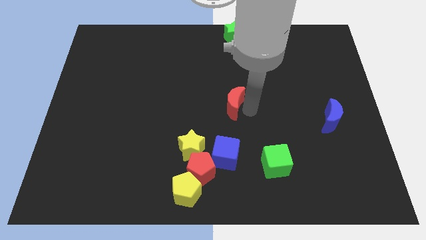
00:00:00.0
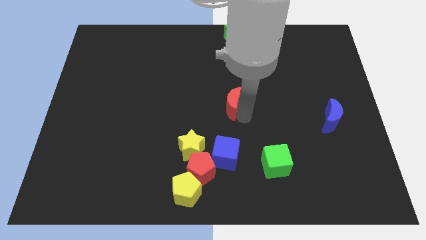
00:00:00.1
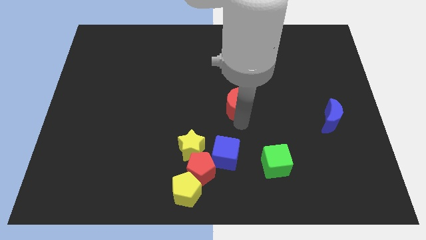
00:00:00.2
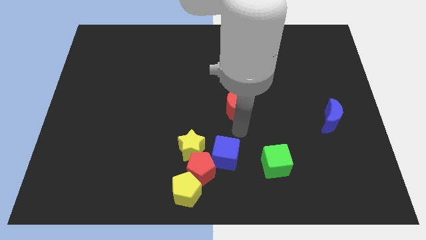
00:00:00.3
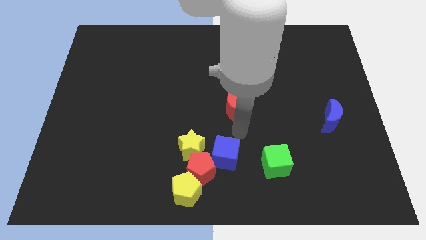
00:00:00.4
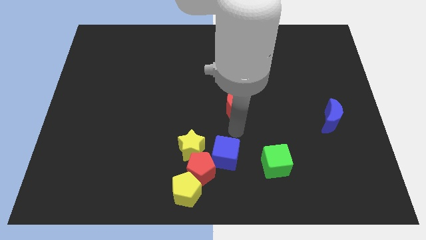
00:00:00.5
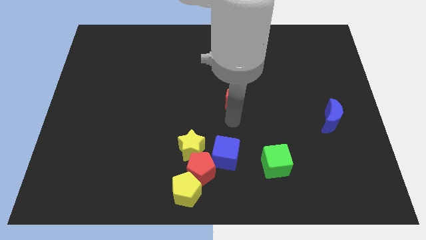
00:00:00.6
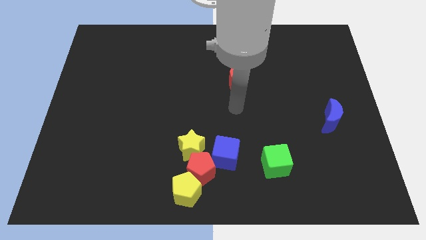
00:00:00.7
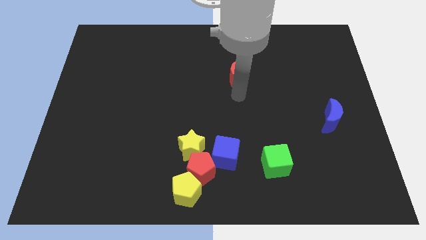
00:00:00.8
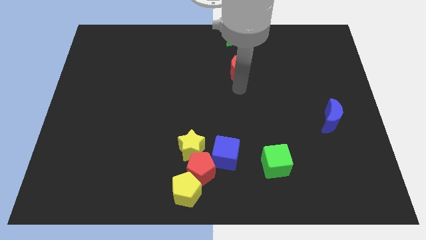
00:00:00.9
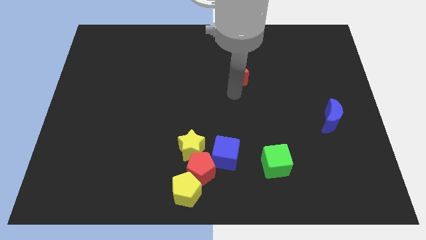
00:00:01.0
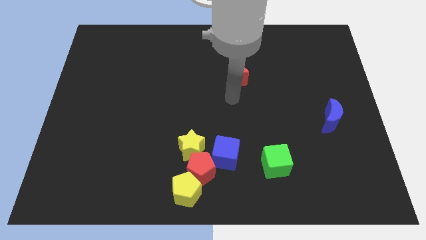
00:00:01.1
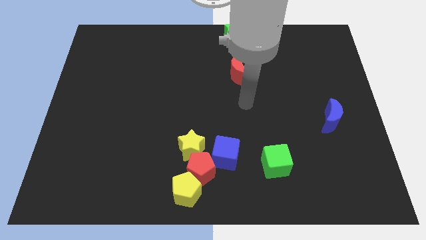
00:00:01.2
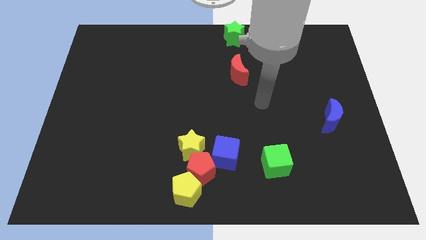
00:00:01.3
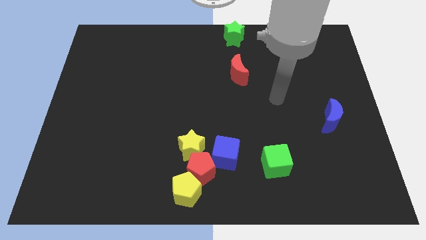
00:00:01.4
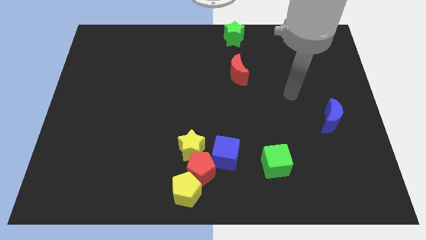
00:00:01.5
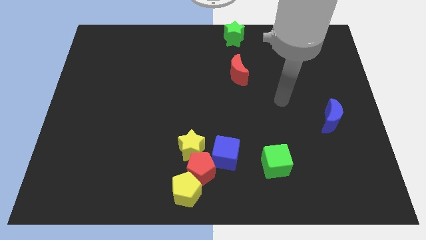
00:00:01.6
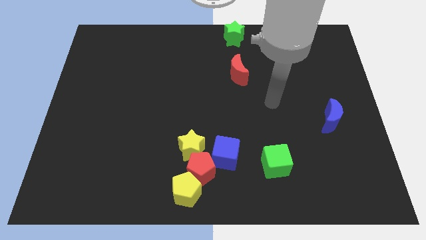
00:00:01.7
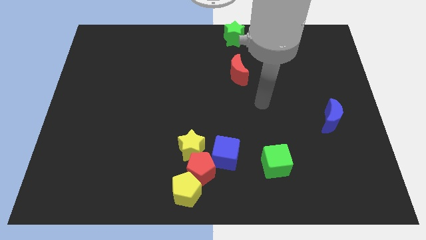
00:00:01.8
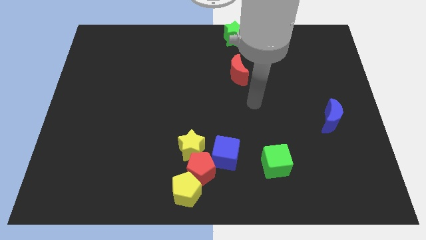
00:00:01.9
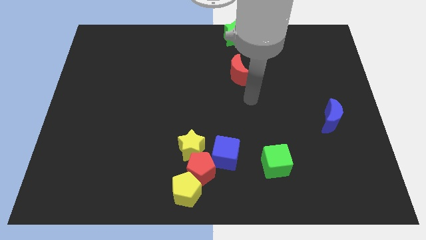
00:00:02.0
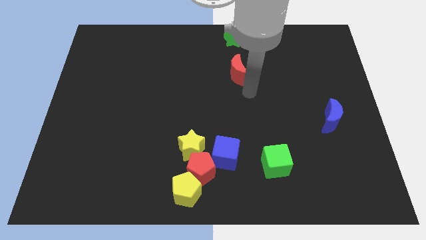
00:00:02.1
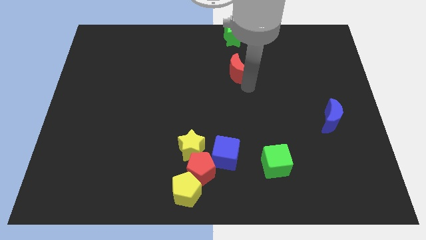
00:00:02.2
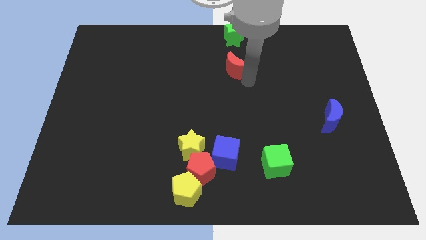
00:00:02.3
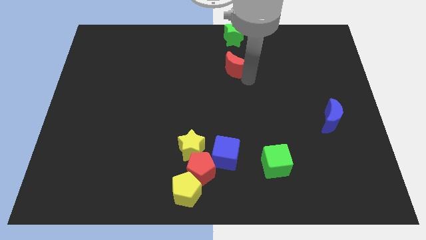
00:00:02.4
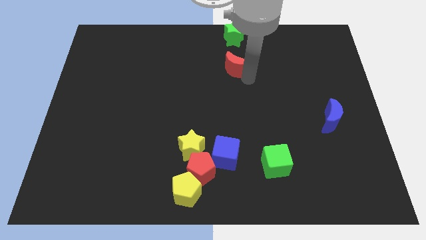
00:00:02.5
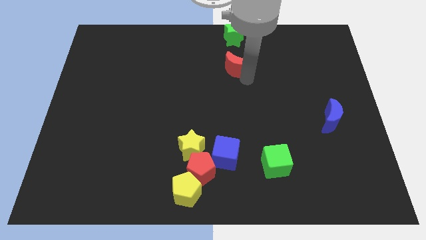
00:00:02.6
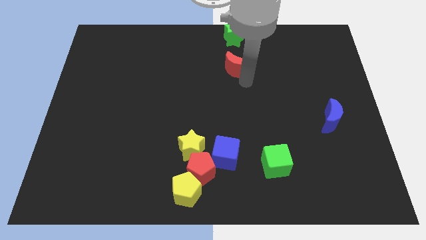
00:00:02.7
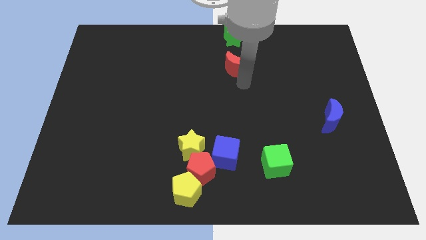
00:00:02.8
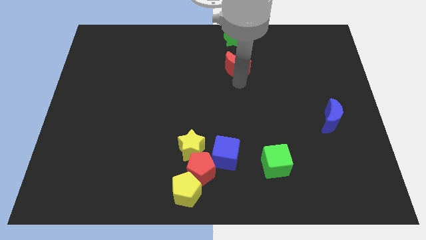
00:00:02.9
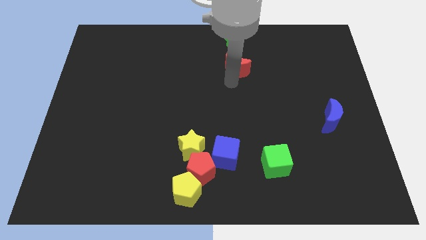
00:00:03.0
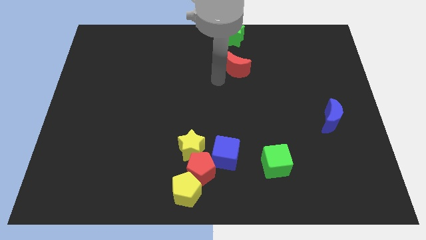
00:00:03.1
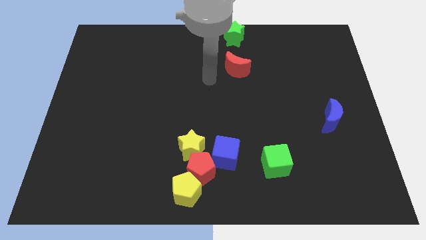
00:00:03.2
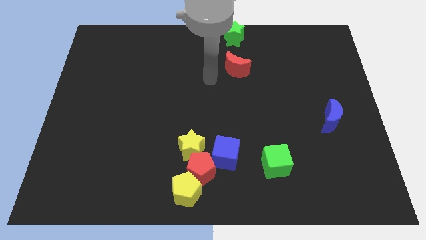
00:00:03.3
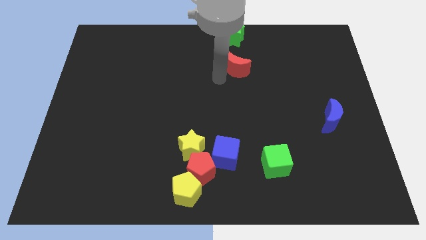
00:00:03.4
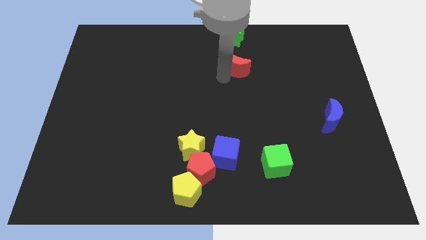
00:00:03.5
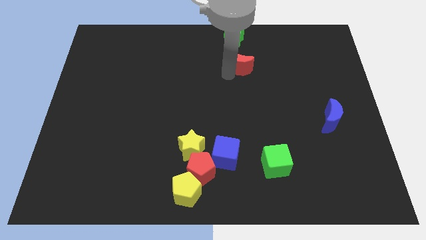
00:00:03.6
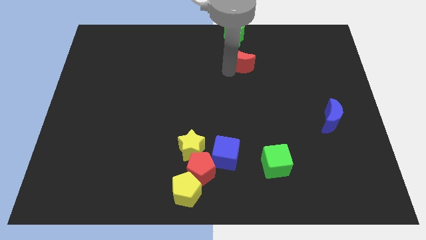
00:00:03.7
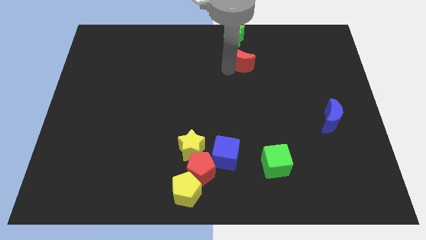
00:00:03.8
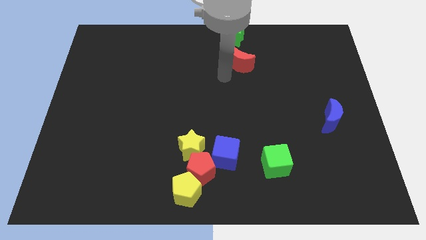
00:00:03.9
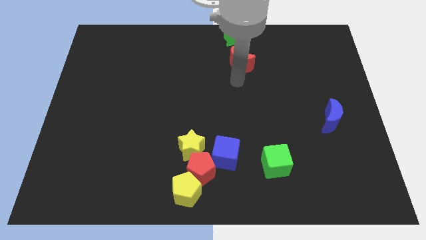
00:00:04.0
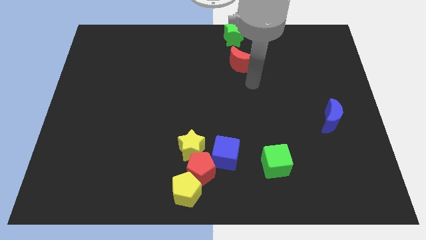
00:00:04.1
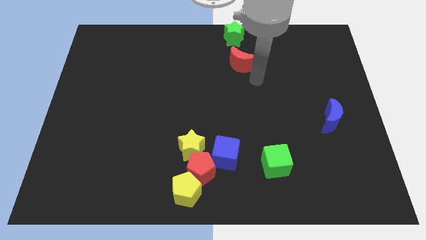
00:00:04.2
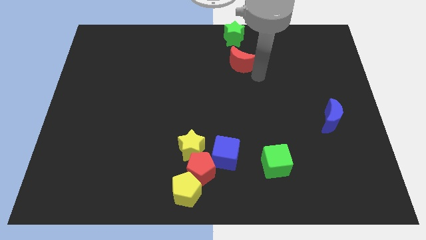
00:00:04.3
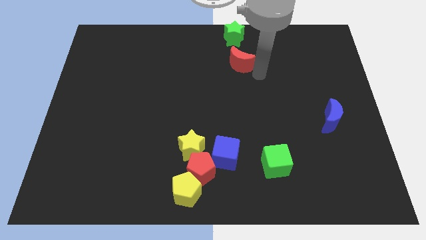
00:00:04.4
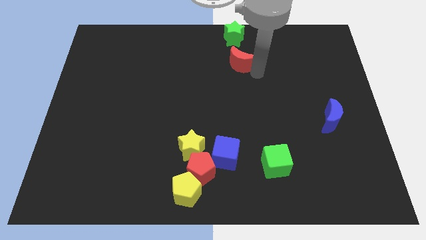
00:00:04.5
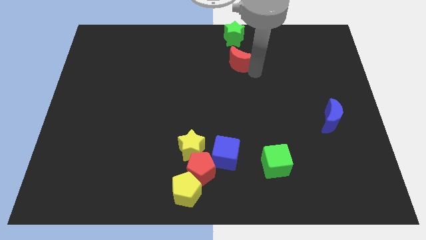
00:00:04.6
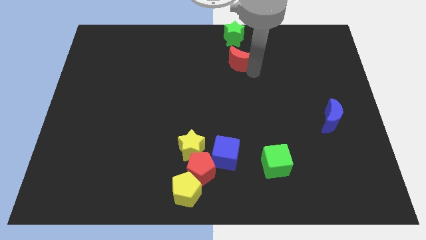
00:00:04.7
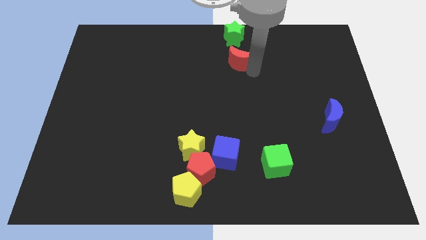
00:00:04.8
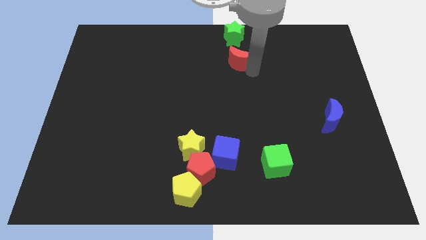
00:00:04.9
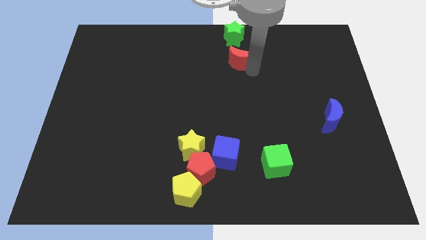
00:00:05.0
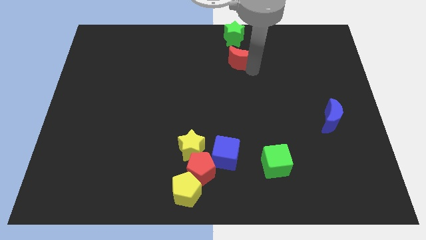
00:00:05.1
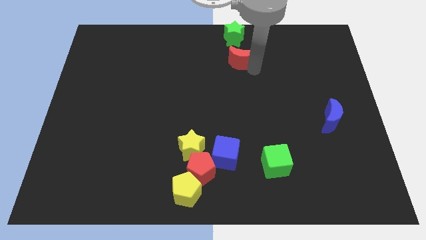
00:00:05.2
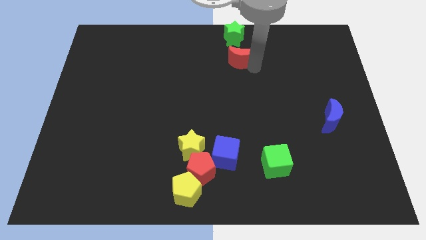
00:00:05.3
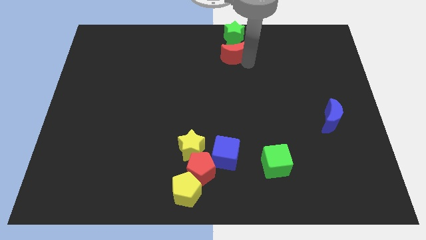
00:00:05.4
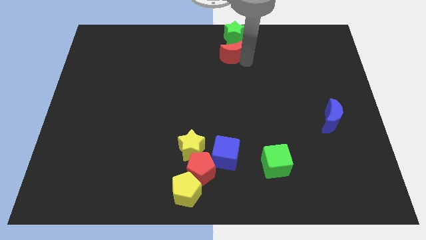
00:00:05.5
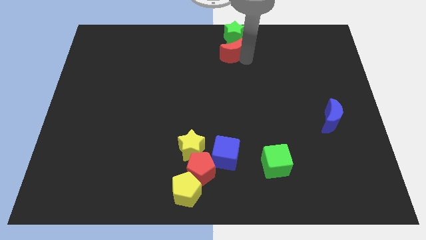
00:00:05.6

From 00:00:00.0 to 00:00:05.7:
move the red crescent into the green star

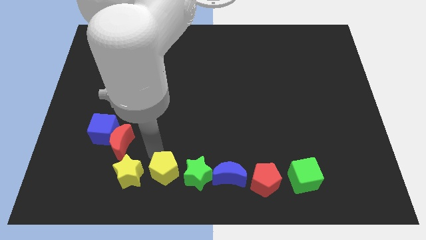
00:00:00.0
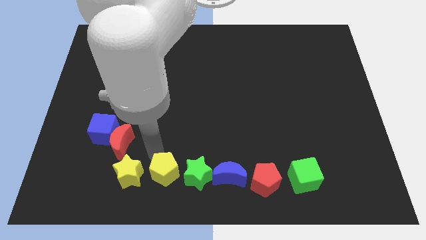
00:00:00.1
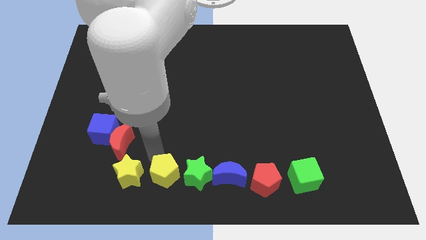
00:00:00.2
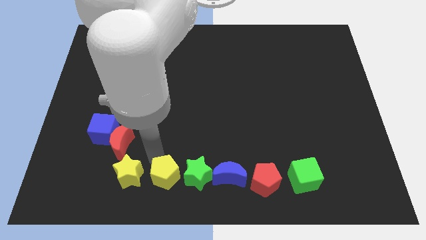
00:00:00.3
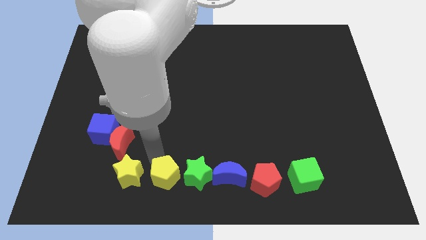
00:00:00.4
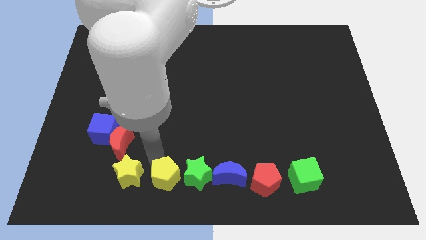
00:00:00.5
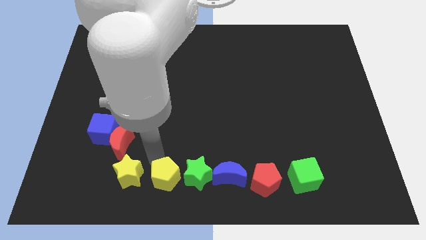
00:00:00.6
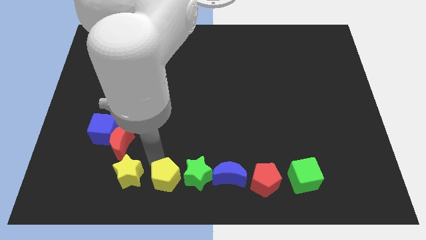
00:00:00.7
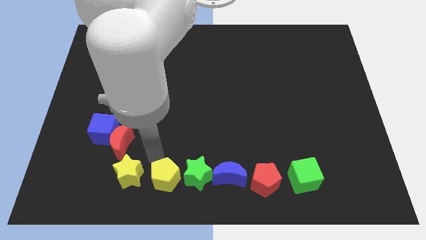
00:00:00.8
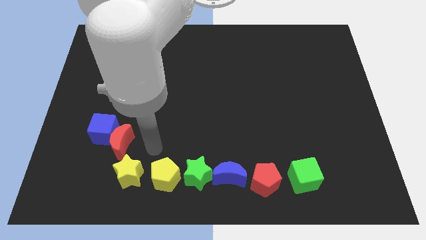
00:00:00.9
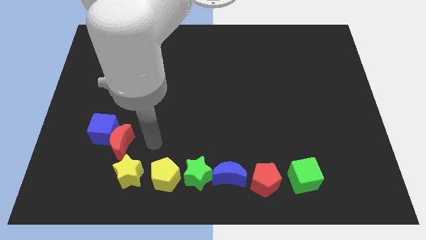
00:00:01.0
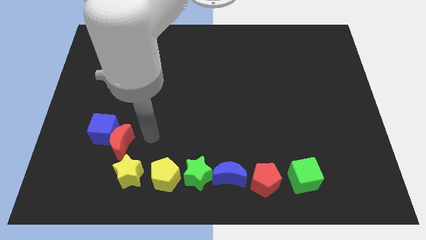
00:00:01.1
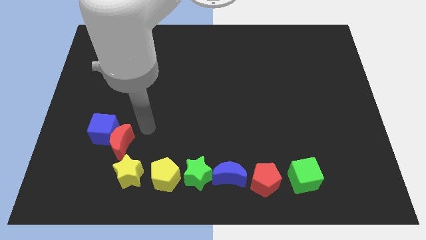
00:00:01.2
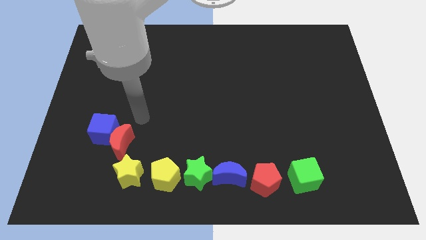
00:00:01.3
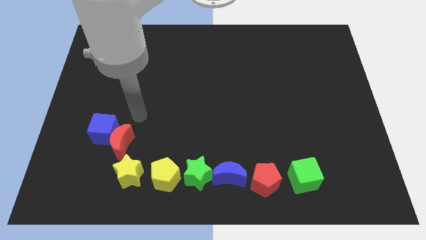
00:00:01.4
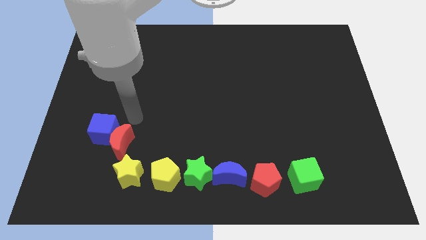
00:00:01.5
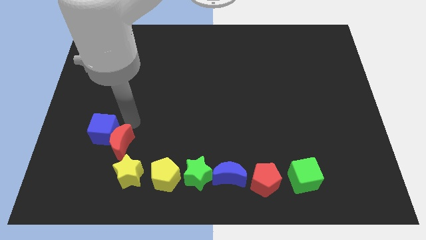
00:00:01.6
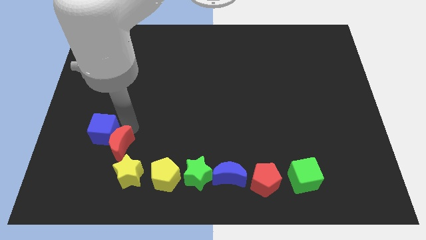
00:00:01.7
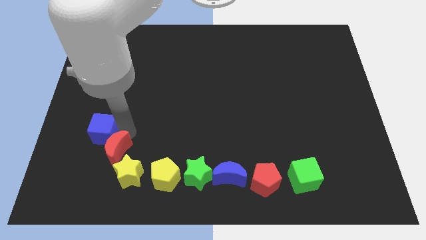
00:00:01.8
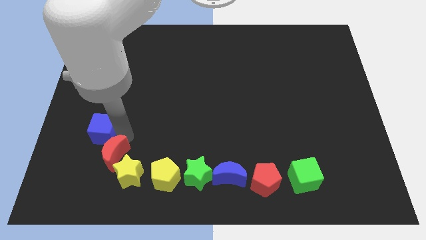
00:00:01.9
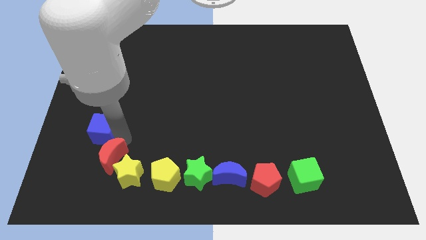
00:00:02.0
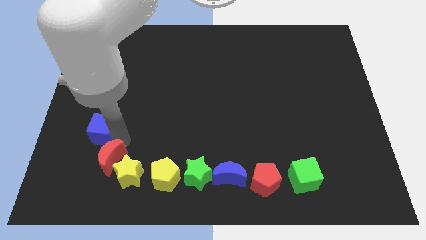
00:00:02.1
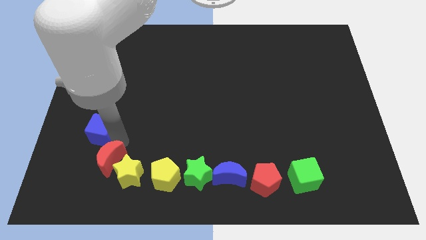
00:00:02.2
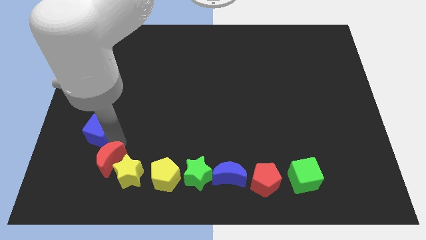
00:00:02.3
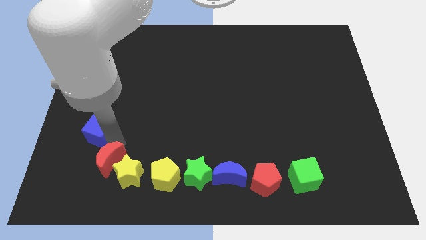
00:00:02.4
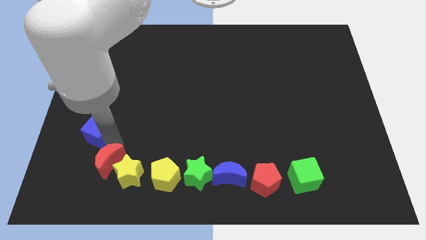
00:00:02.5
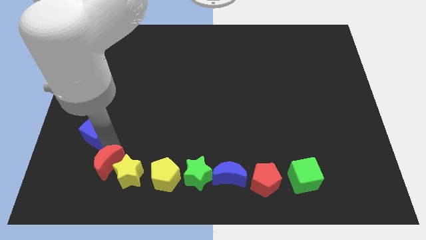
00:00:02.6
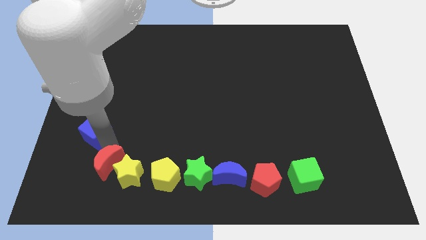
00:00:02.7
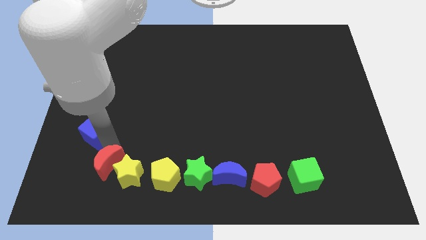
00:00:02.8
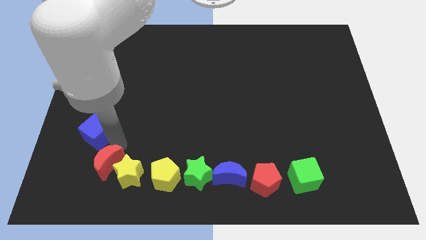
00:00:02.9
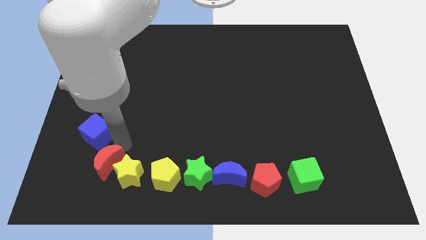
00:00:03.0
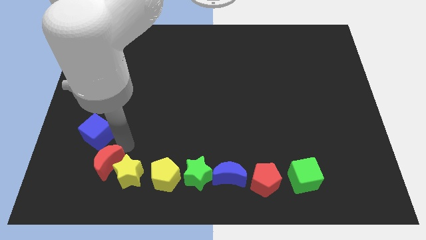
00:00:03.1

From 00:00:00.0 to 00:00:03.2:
slide the yellow pentagon and red crescent towards bottom

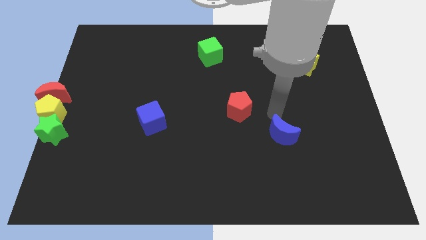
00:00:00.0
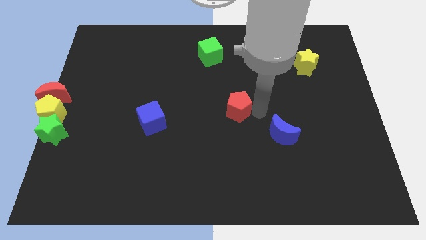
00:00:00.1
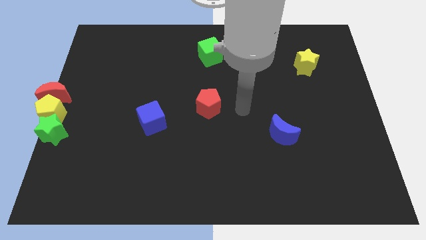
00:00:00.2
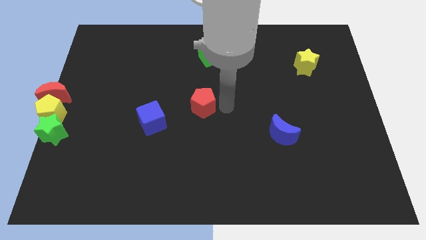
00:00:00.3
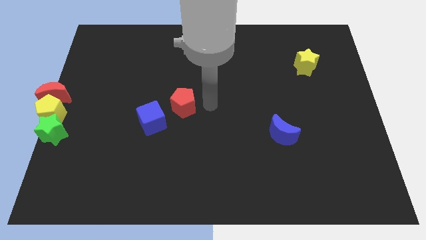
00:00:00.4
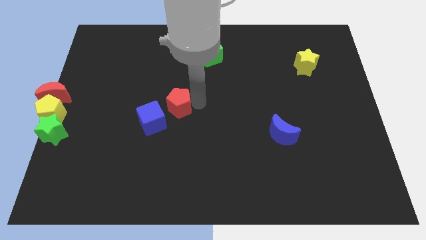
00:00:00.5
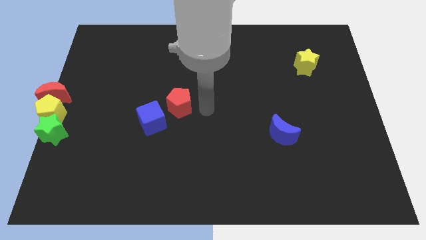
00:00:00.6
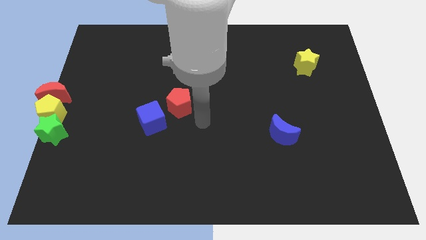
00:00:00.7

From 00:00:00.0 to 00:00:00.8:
move the red pentagon close to the blue cube
